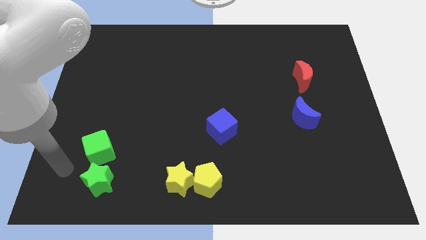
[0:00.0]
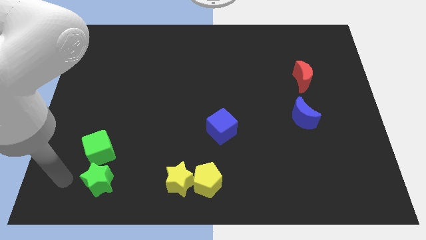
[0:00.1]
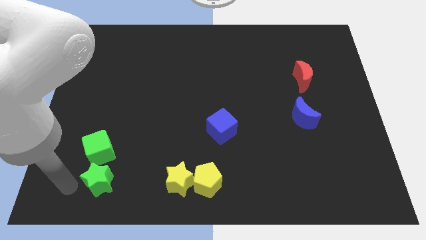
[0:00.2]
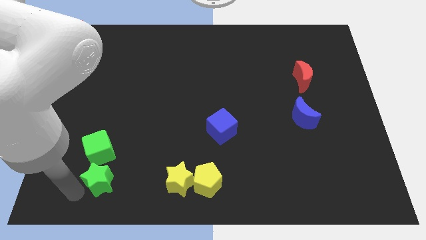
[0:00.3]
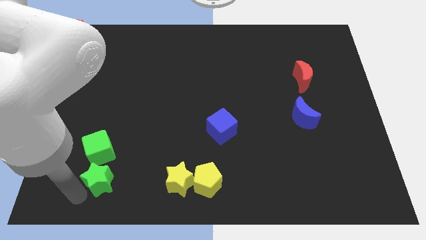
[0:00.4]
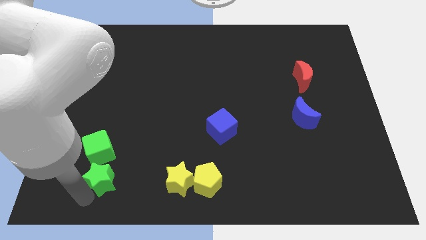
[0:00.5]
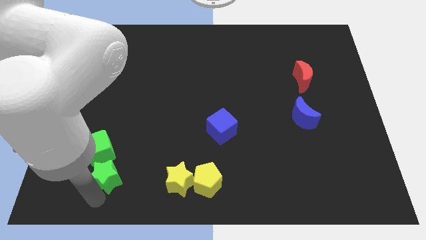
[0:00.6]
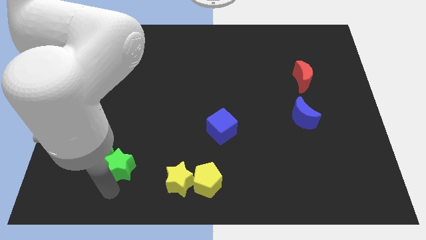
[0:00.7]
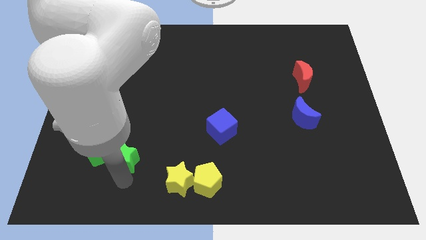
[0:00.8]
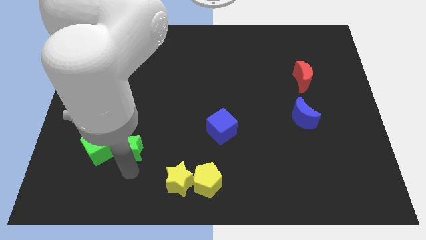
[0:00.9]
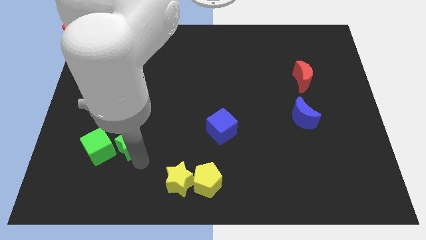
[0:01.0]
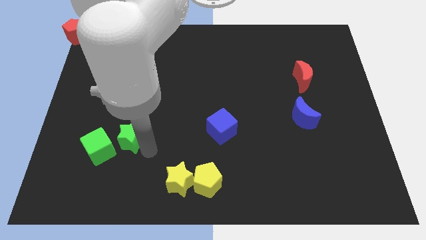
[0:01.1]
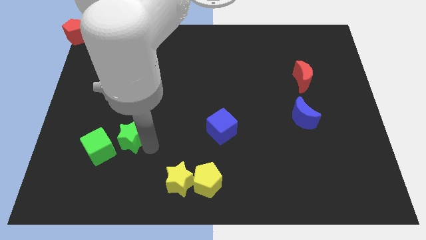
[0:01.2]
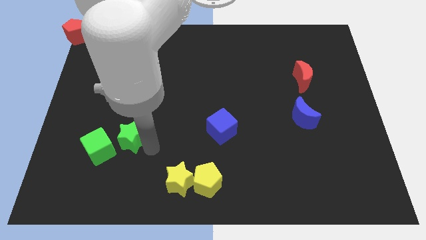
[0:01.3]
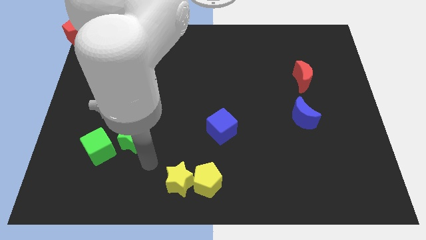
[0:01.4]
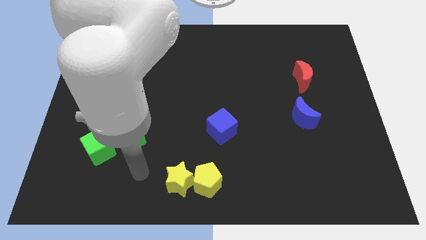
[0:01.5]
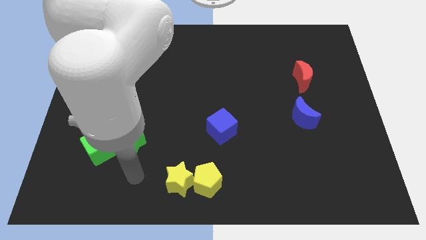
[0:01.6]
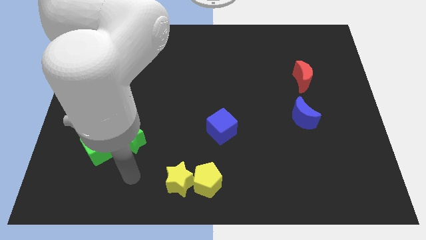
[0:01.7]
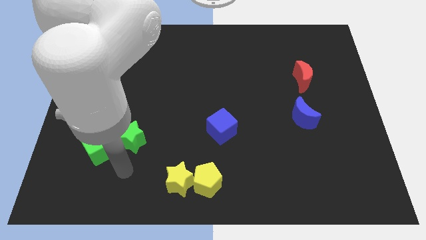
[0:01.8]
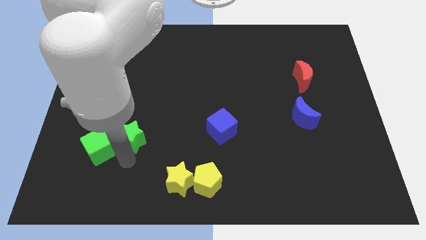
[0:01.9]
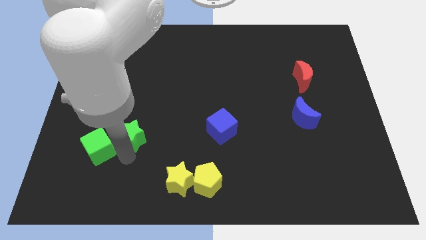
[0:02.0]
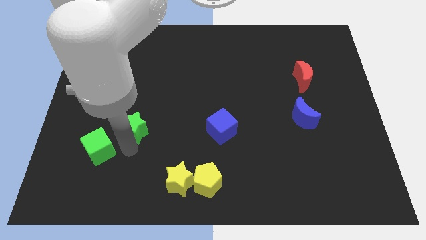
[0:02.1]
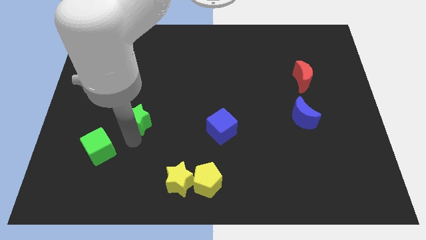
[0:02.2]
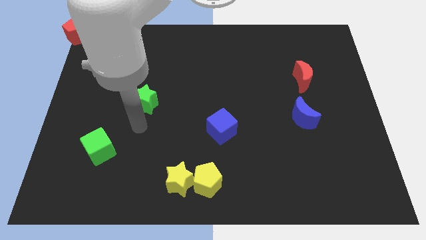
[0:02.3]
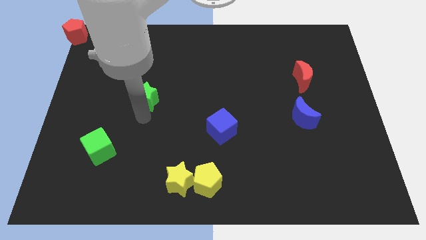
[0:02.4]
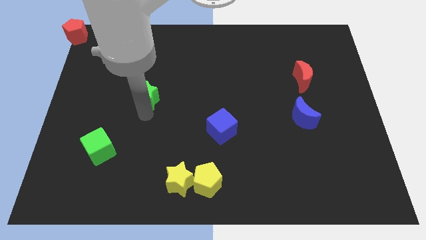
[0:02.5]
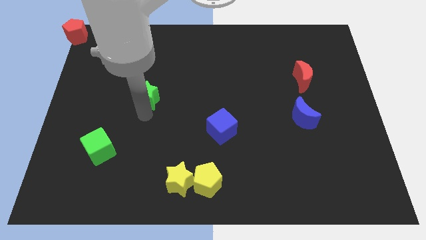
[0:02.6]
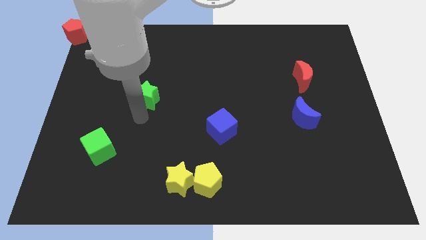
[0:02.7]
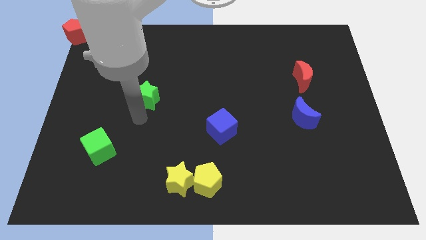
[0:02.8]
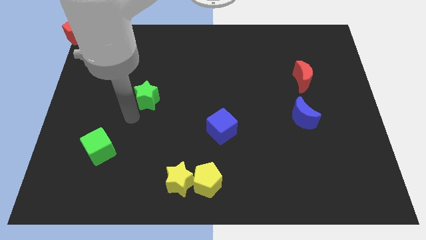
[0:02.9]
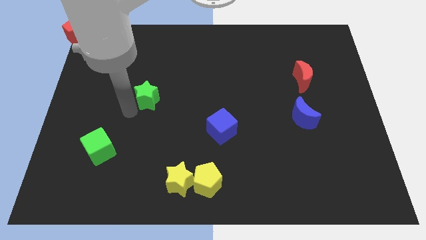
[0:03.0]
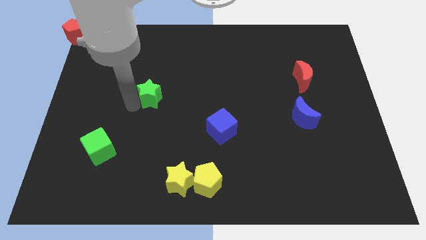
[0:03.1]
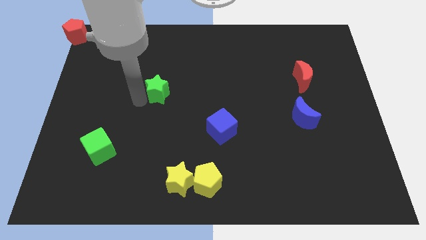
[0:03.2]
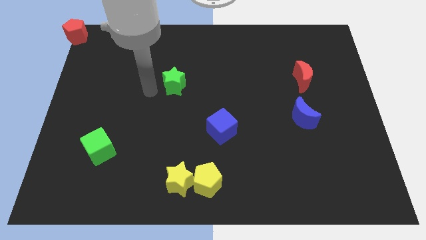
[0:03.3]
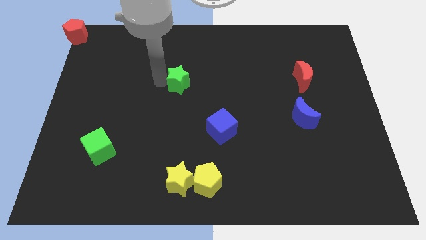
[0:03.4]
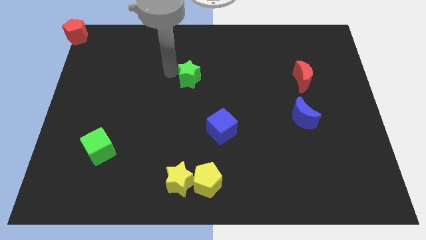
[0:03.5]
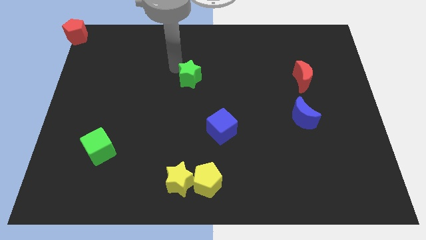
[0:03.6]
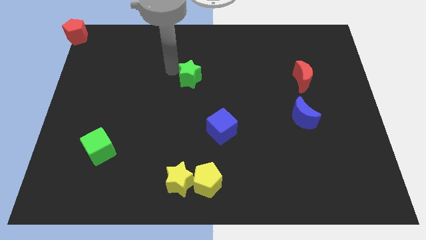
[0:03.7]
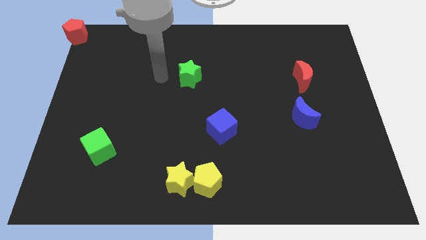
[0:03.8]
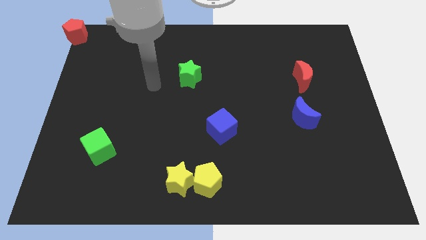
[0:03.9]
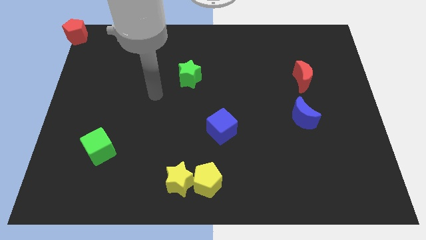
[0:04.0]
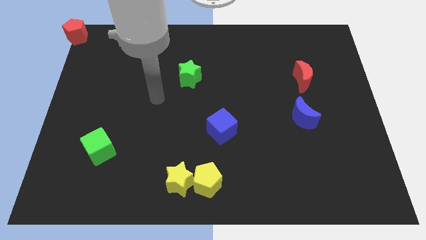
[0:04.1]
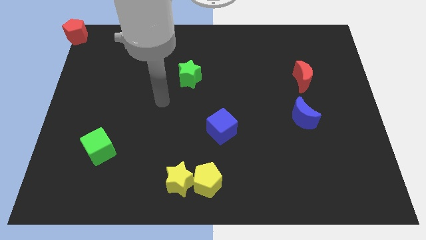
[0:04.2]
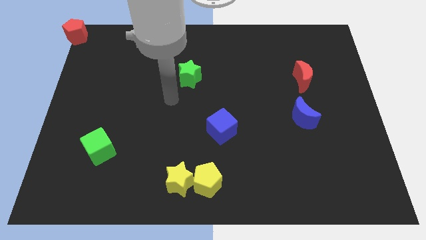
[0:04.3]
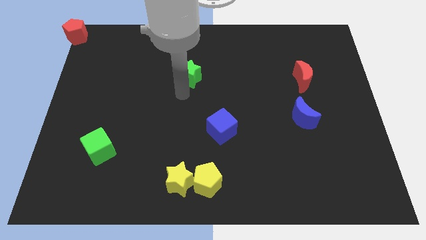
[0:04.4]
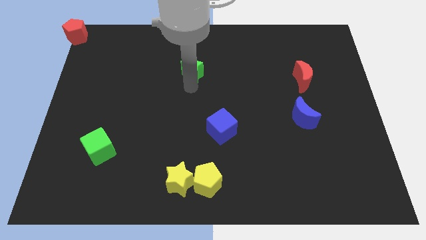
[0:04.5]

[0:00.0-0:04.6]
place the green star above the blue cube

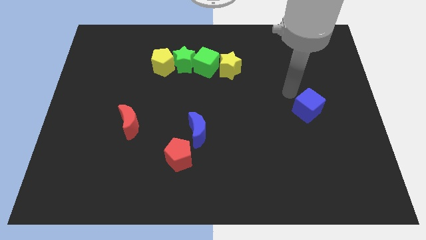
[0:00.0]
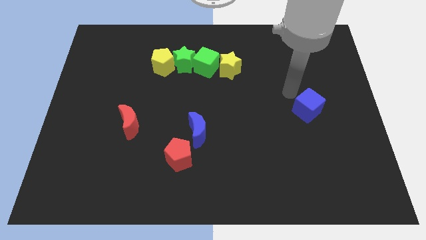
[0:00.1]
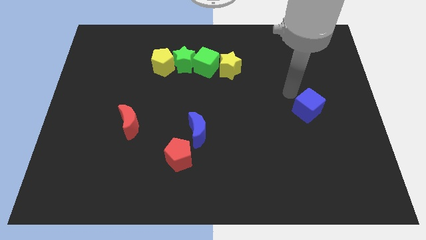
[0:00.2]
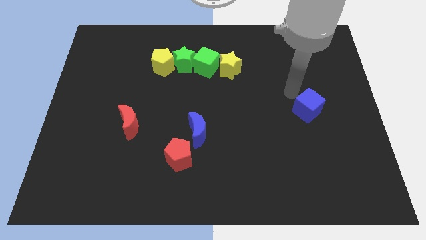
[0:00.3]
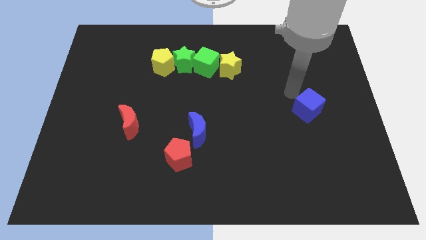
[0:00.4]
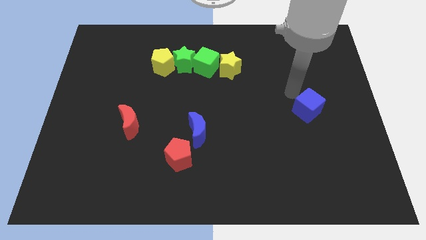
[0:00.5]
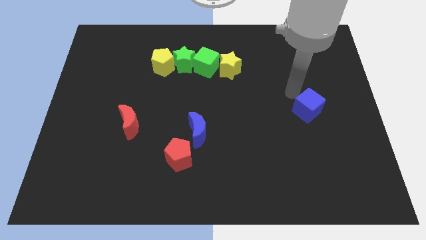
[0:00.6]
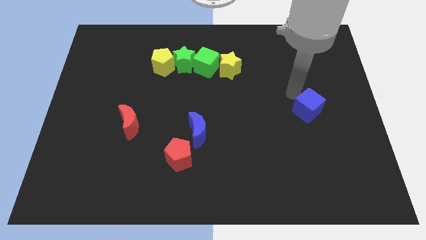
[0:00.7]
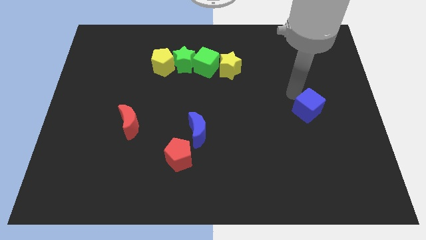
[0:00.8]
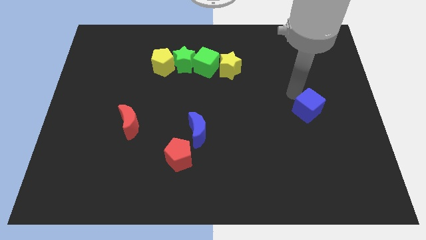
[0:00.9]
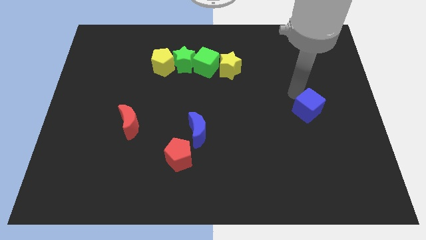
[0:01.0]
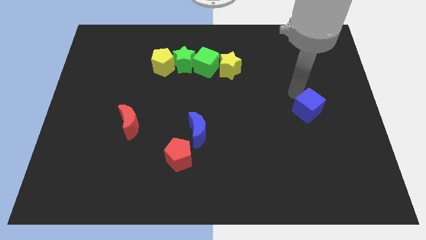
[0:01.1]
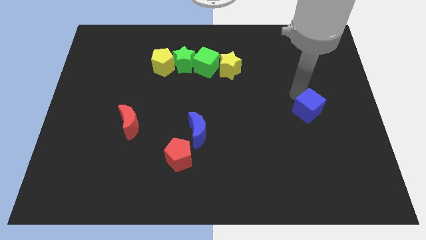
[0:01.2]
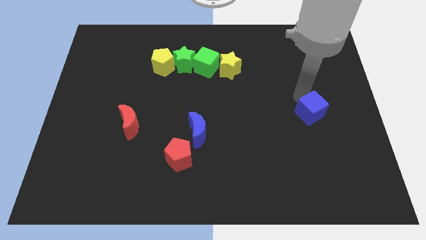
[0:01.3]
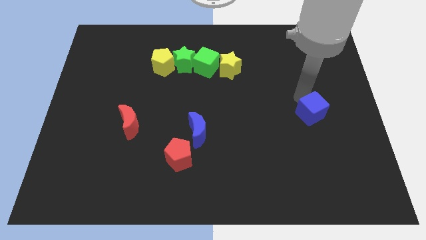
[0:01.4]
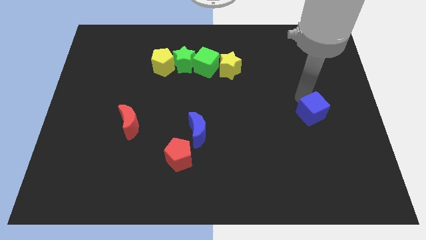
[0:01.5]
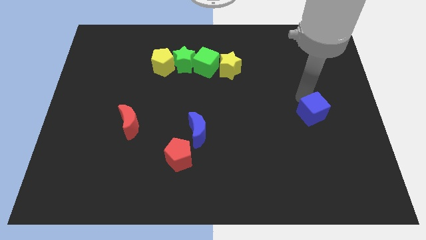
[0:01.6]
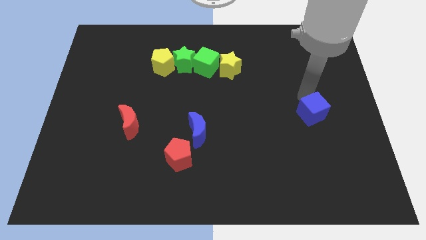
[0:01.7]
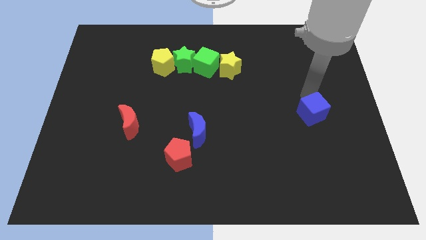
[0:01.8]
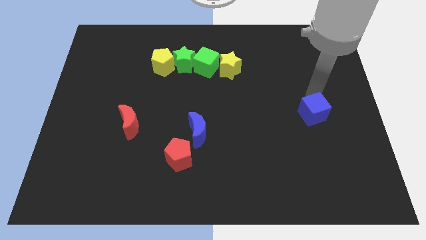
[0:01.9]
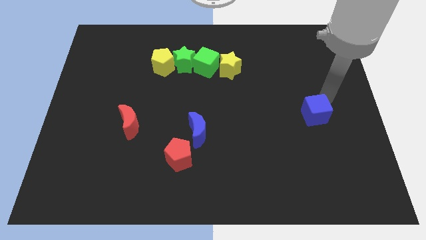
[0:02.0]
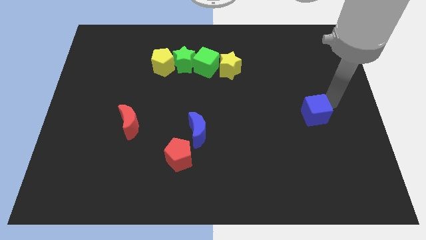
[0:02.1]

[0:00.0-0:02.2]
slightly push the blue cube

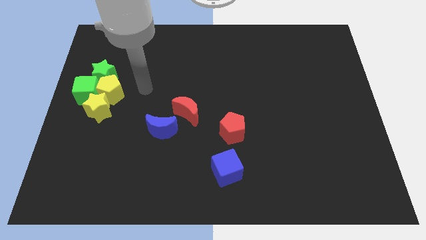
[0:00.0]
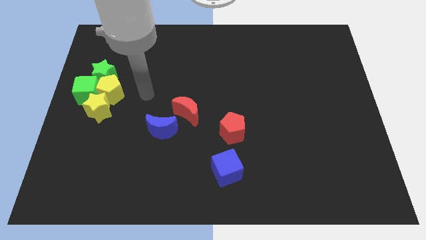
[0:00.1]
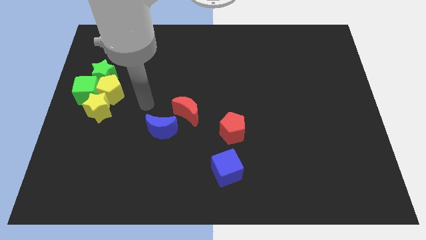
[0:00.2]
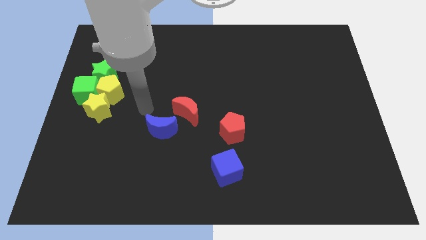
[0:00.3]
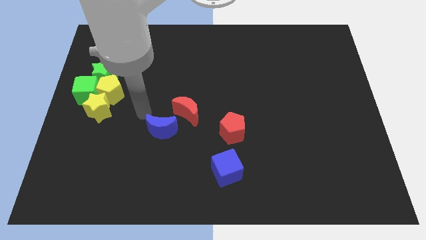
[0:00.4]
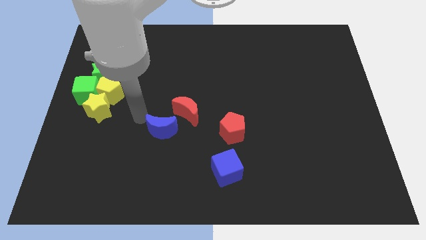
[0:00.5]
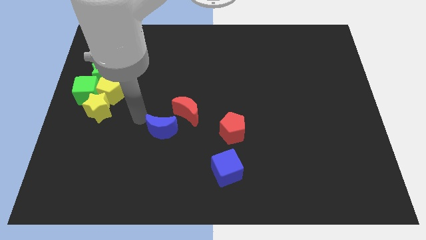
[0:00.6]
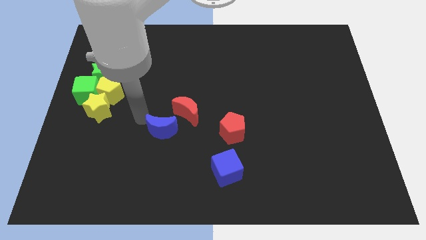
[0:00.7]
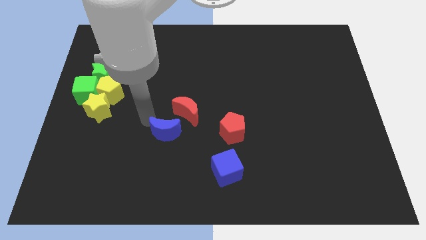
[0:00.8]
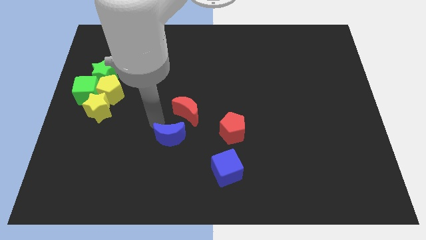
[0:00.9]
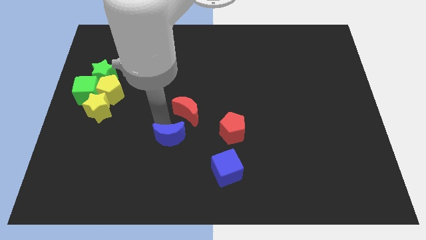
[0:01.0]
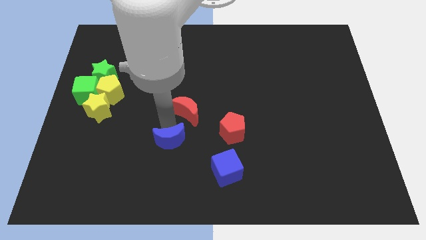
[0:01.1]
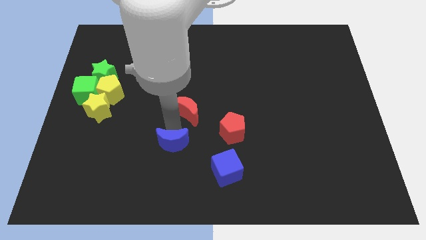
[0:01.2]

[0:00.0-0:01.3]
place the blue moon vertically below the red moon

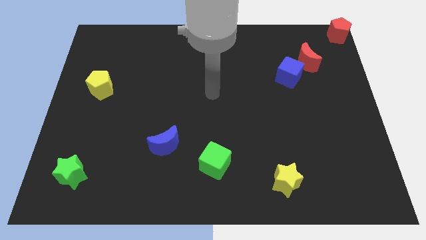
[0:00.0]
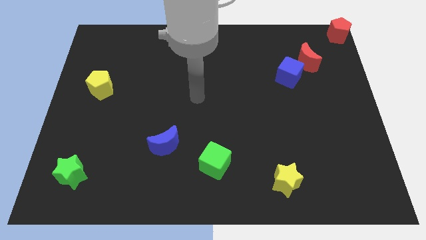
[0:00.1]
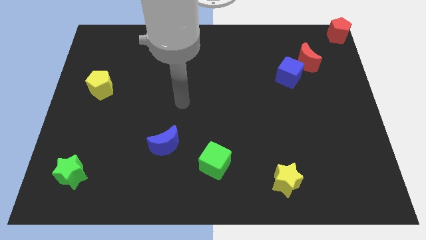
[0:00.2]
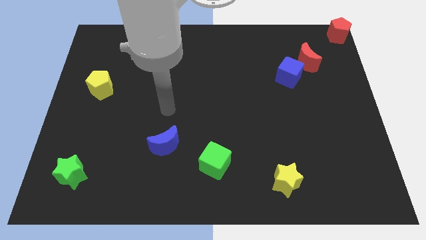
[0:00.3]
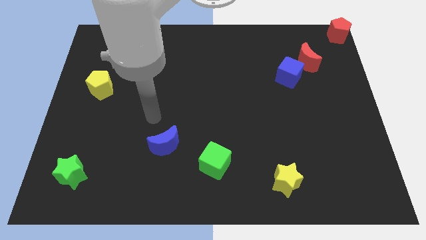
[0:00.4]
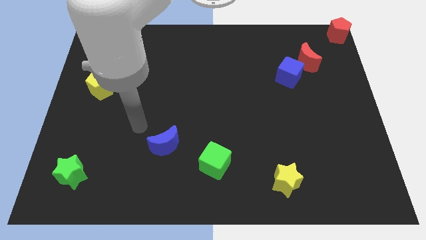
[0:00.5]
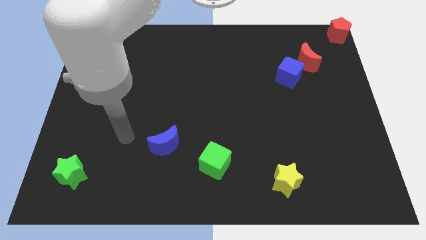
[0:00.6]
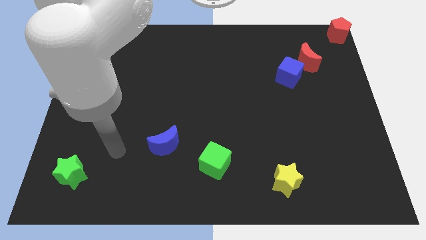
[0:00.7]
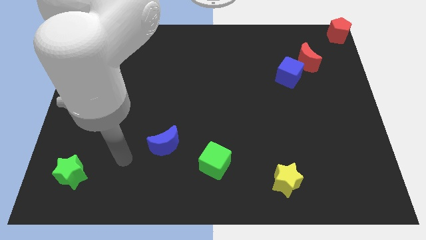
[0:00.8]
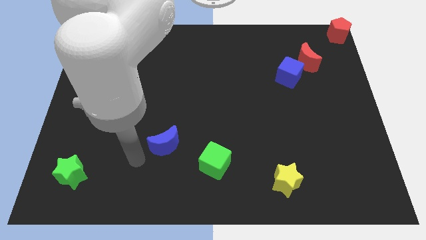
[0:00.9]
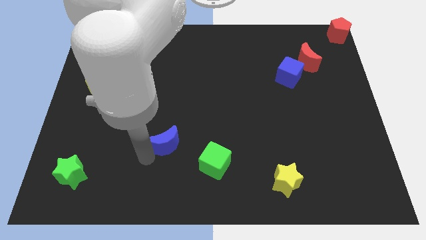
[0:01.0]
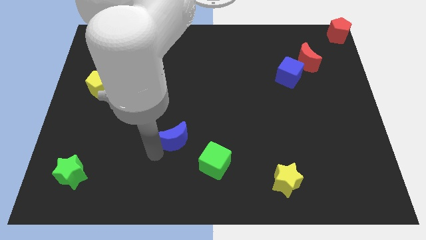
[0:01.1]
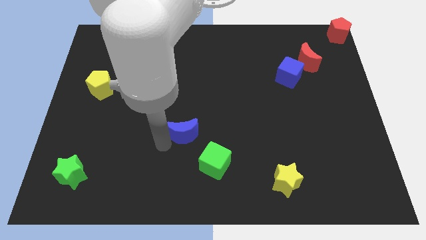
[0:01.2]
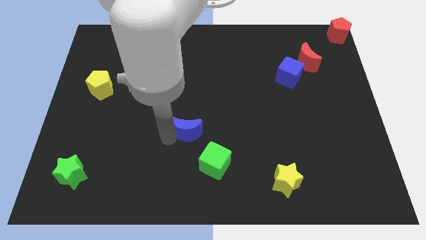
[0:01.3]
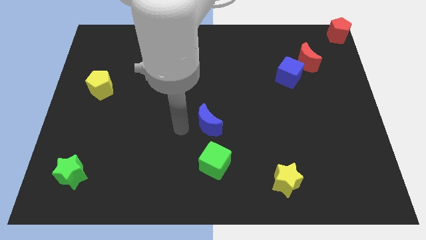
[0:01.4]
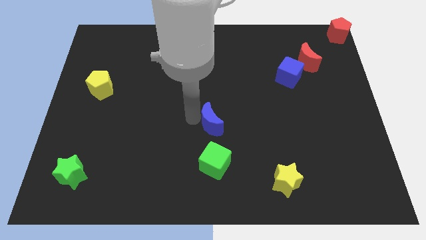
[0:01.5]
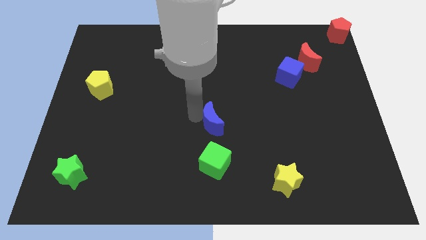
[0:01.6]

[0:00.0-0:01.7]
place the blue crescent vertically above the green cube
